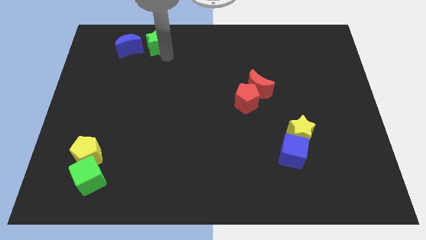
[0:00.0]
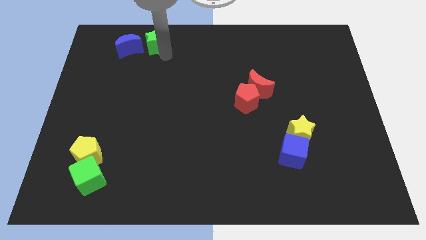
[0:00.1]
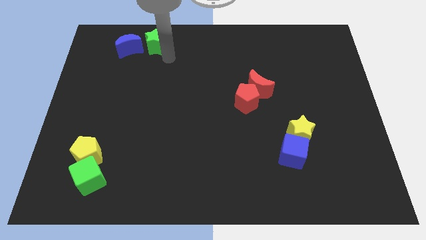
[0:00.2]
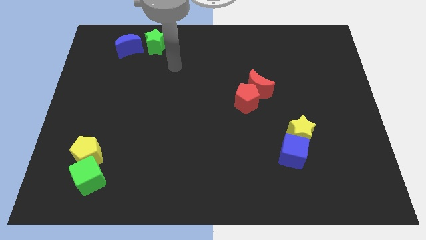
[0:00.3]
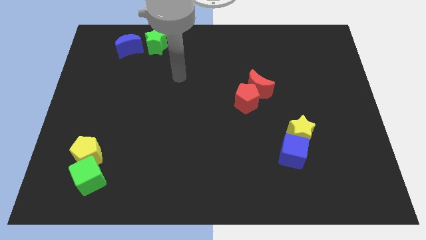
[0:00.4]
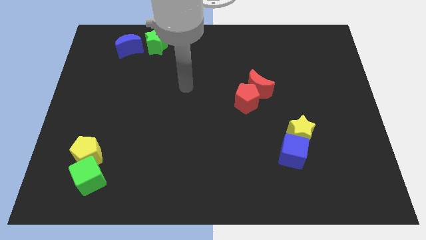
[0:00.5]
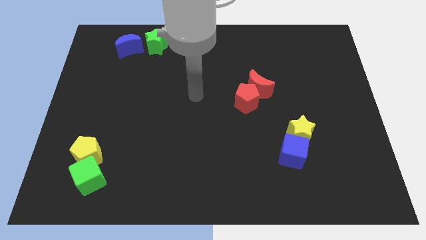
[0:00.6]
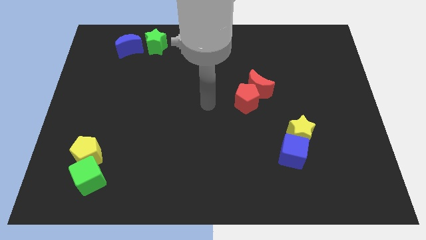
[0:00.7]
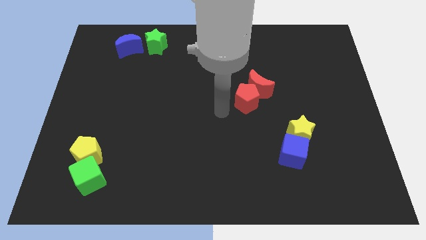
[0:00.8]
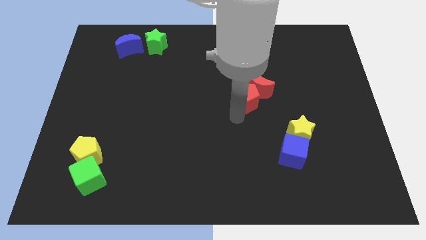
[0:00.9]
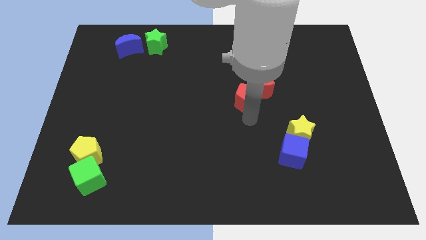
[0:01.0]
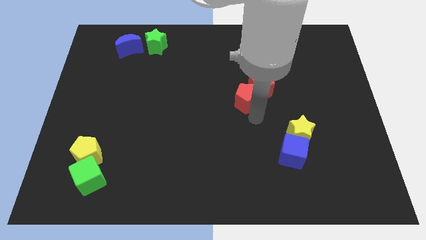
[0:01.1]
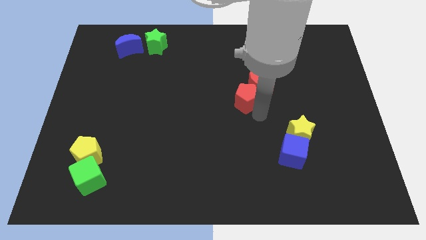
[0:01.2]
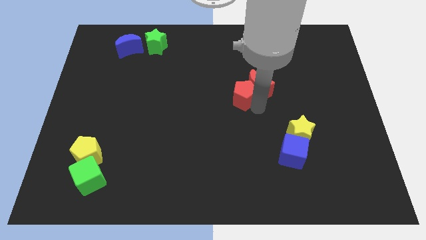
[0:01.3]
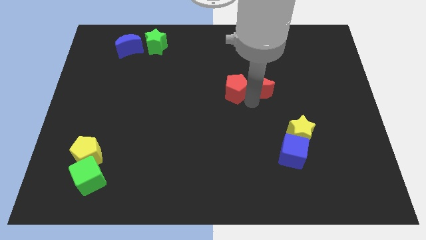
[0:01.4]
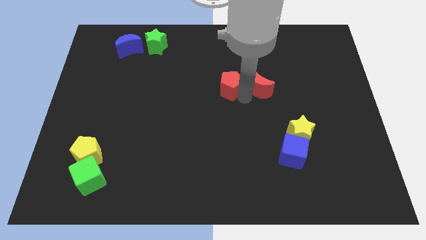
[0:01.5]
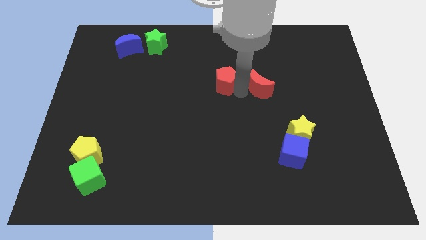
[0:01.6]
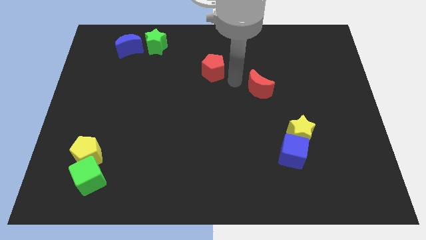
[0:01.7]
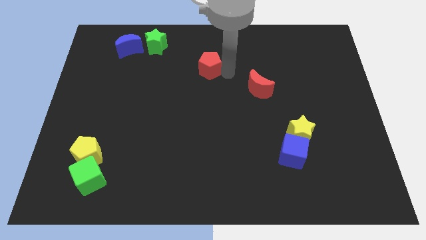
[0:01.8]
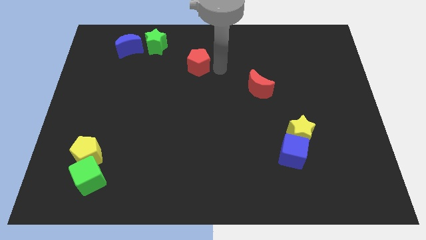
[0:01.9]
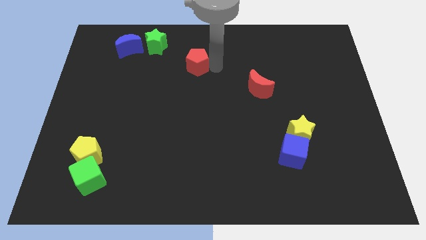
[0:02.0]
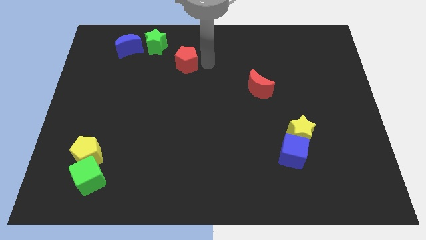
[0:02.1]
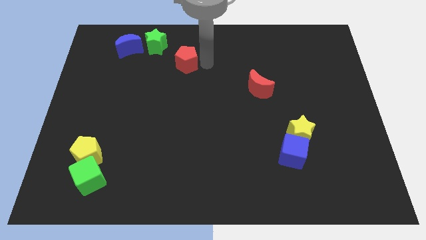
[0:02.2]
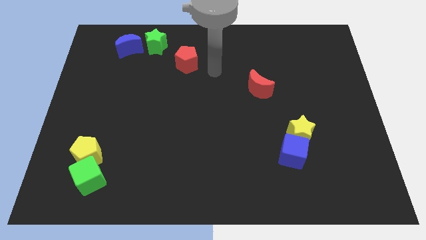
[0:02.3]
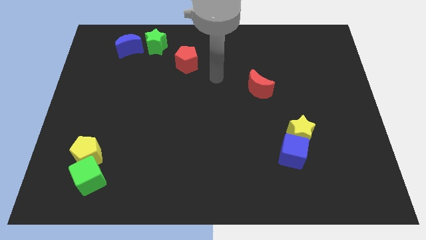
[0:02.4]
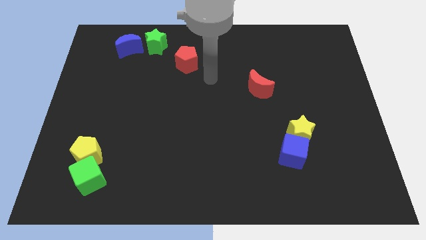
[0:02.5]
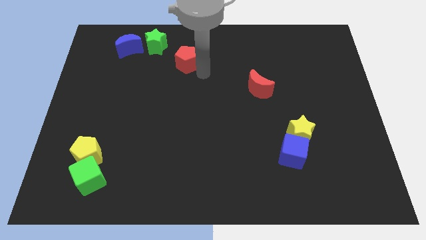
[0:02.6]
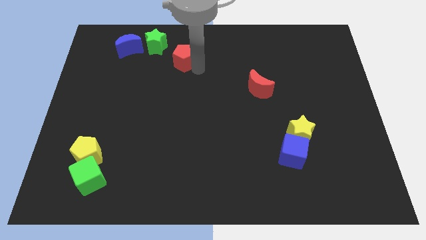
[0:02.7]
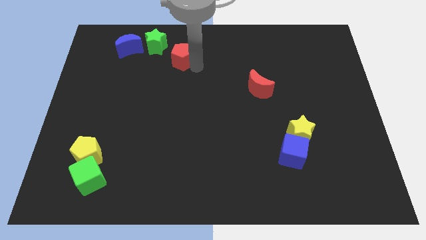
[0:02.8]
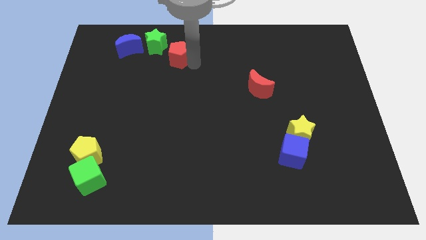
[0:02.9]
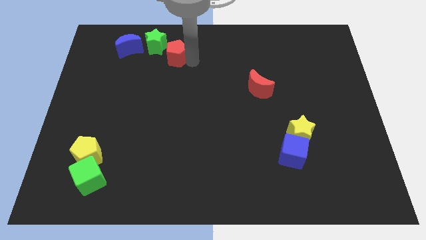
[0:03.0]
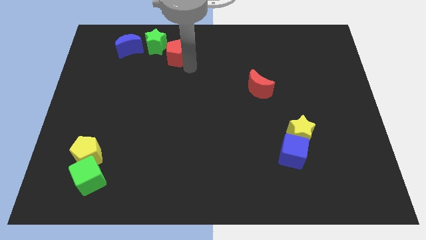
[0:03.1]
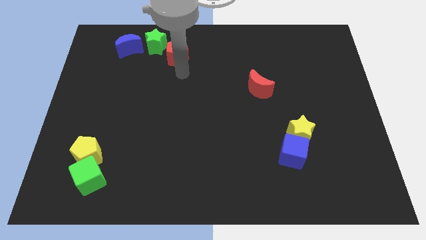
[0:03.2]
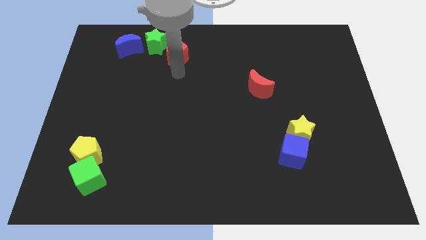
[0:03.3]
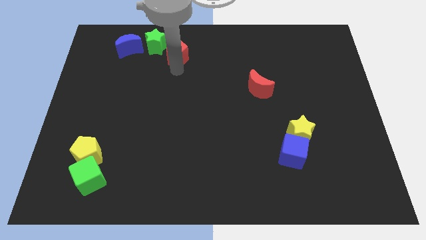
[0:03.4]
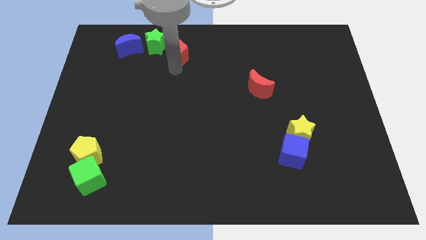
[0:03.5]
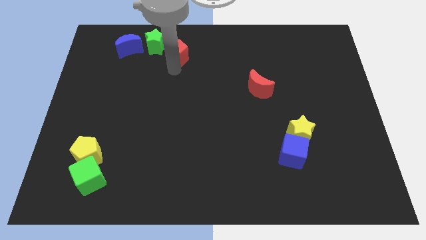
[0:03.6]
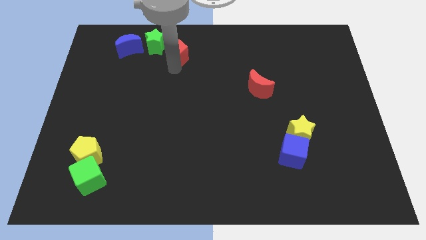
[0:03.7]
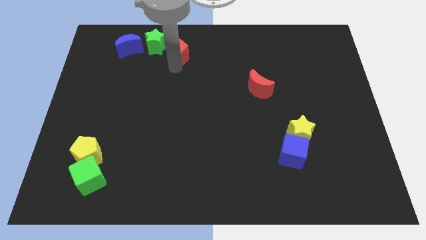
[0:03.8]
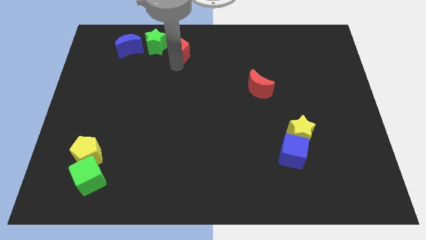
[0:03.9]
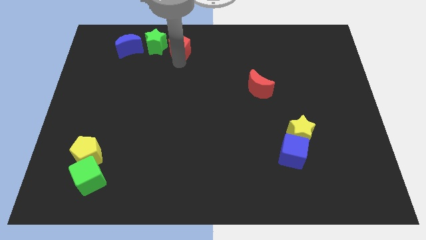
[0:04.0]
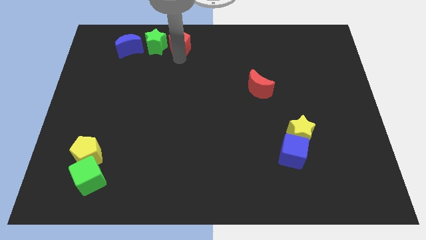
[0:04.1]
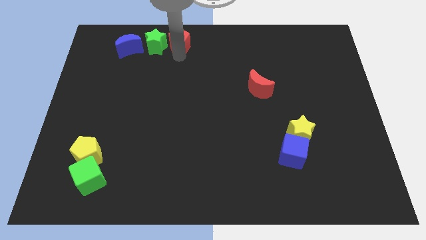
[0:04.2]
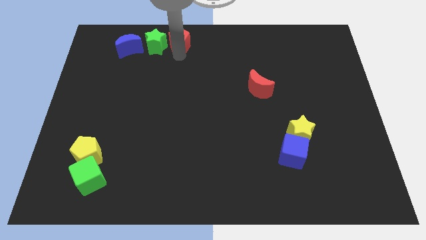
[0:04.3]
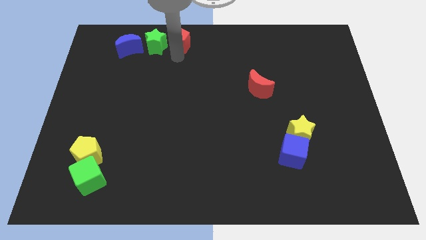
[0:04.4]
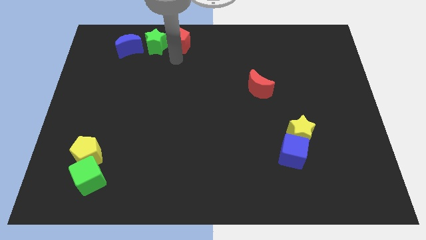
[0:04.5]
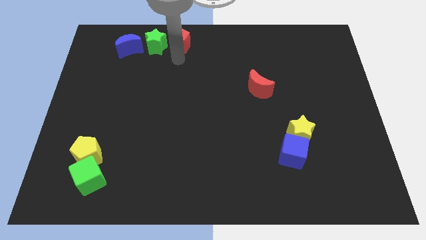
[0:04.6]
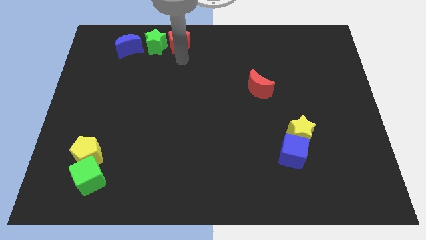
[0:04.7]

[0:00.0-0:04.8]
place the red pentagon at teh right side of the green star

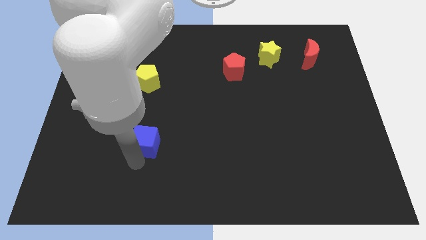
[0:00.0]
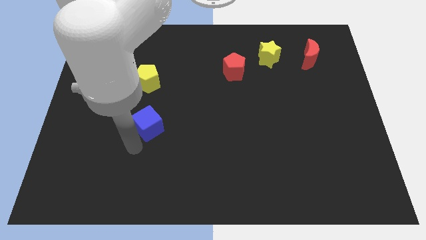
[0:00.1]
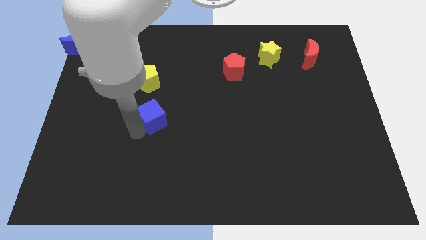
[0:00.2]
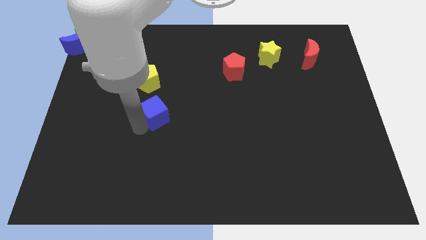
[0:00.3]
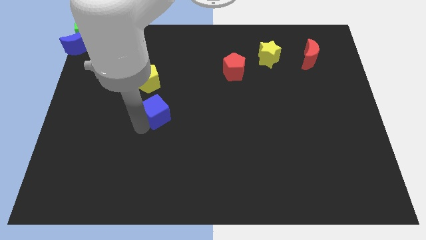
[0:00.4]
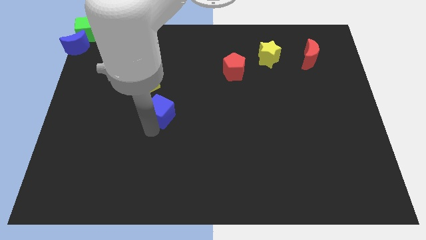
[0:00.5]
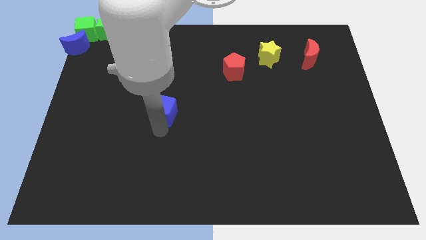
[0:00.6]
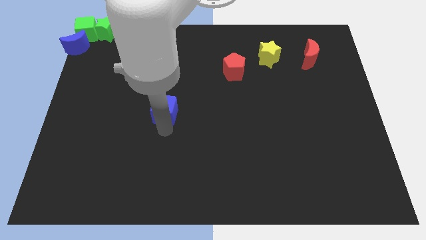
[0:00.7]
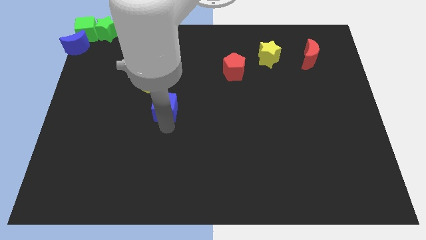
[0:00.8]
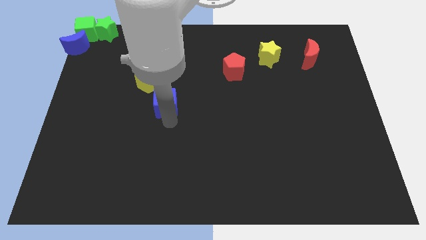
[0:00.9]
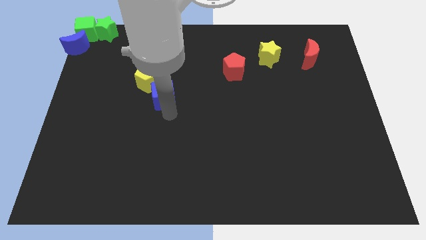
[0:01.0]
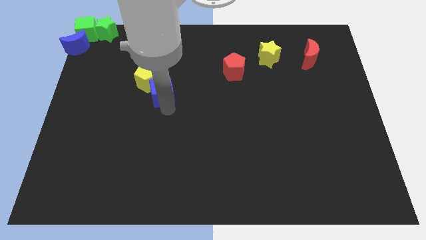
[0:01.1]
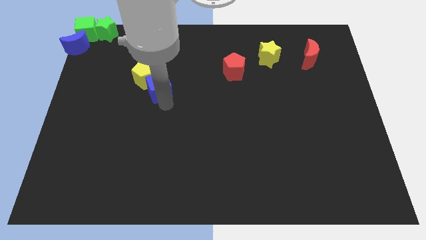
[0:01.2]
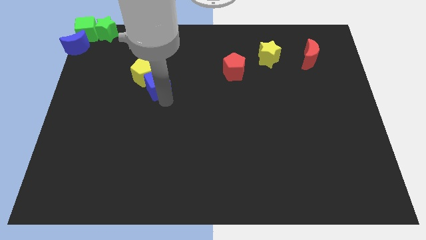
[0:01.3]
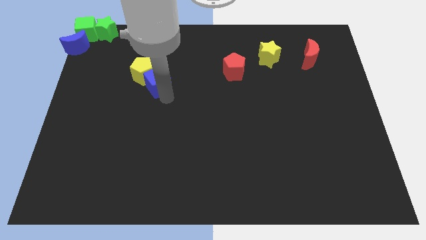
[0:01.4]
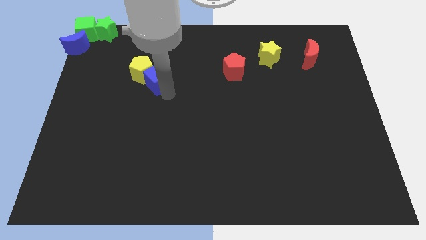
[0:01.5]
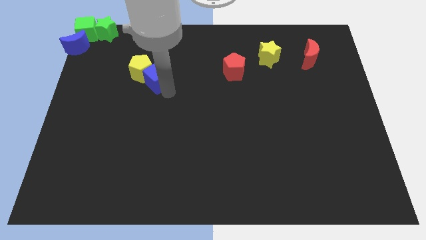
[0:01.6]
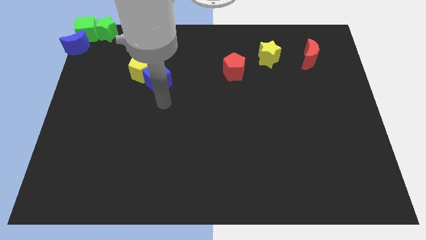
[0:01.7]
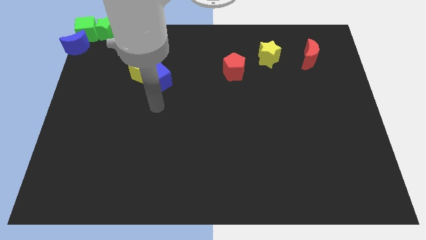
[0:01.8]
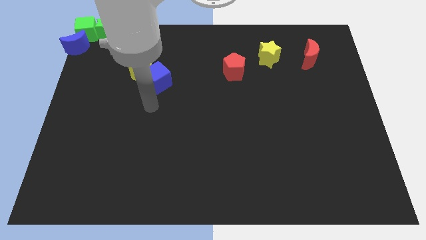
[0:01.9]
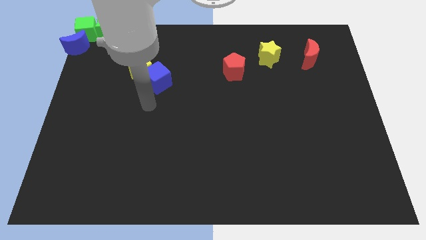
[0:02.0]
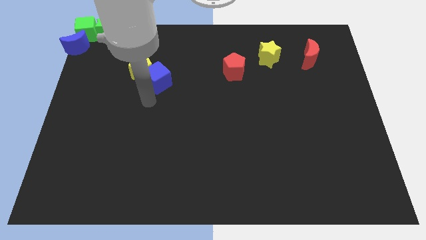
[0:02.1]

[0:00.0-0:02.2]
slide blue cube into yellow pentagon

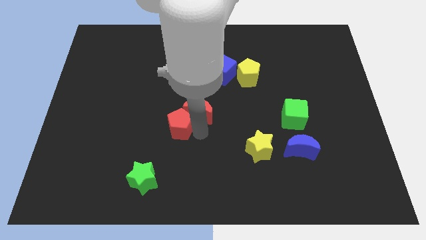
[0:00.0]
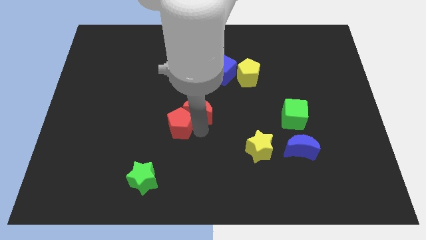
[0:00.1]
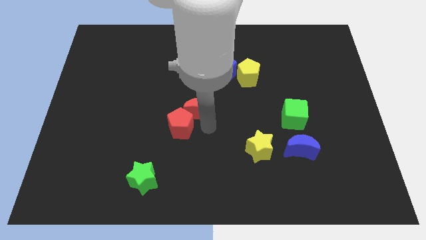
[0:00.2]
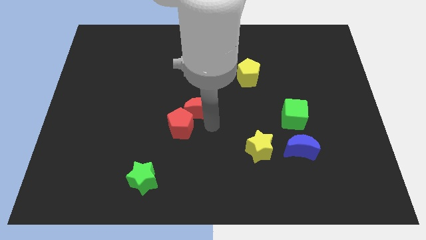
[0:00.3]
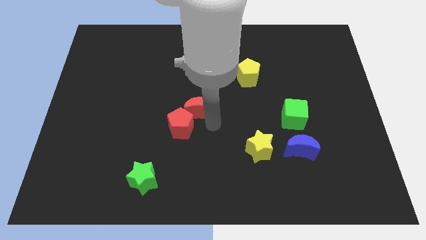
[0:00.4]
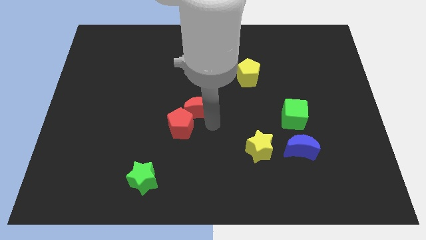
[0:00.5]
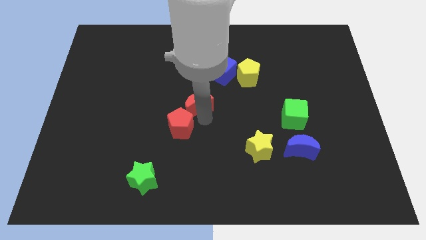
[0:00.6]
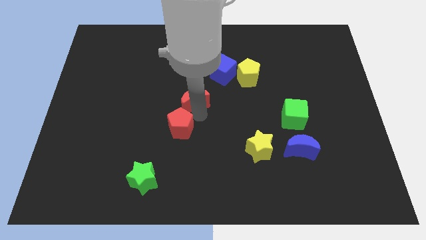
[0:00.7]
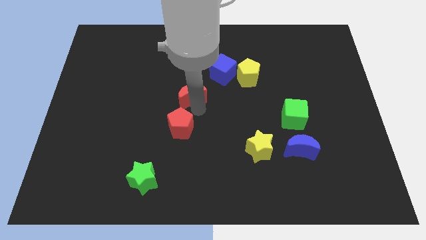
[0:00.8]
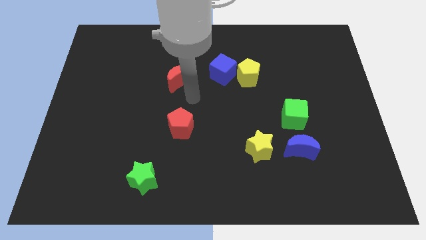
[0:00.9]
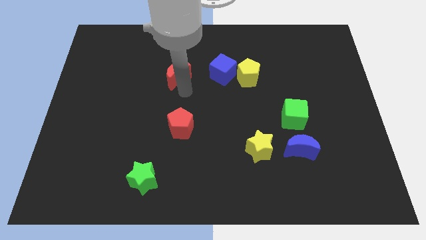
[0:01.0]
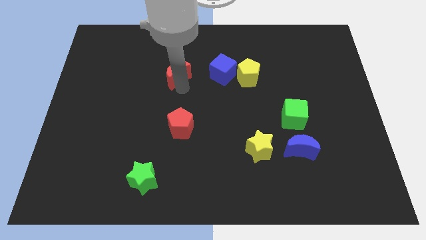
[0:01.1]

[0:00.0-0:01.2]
push the red crescent left to the blue cube

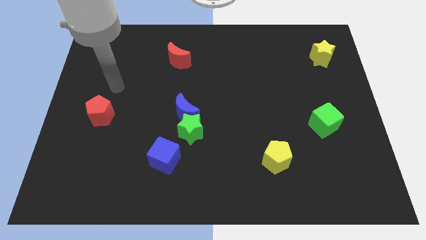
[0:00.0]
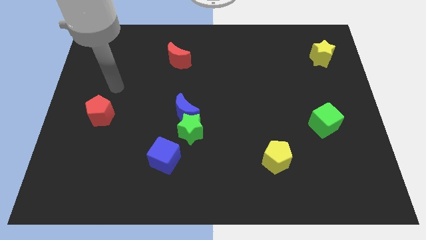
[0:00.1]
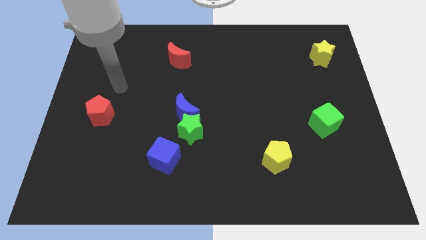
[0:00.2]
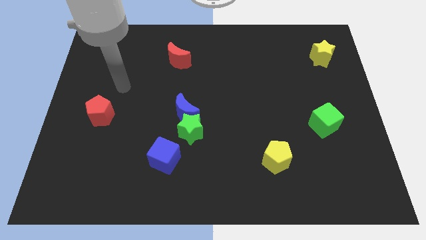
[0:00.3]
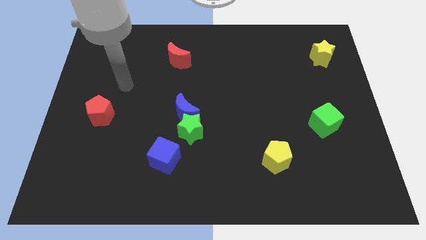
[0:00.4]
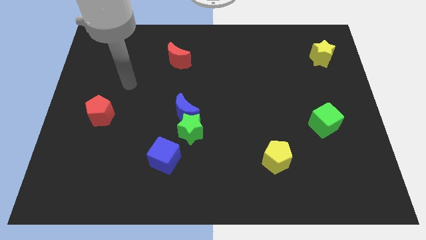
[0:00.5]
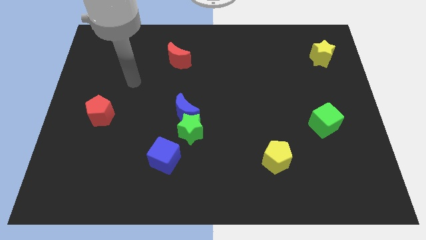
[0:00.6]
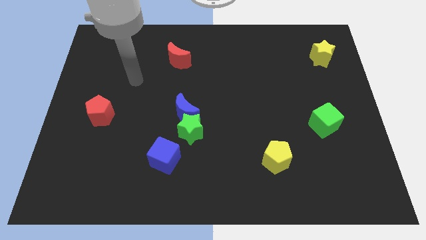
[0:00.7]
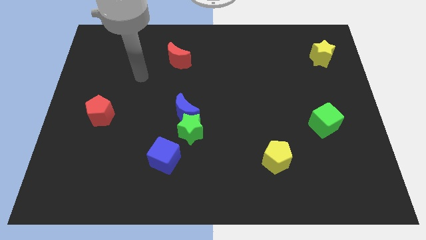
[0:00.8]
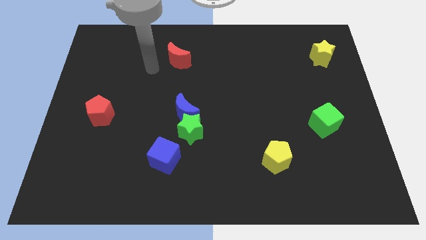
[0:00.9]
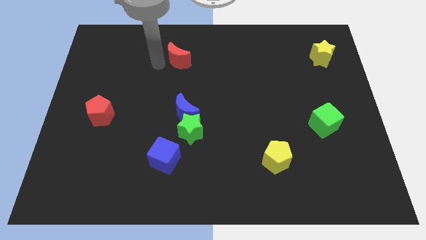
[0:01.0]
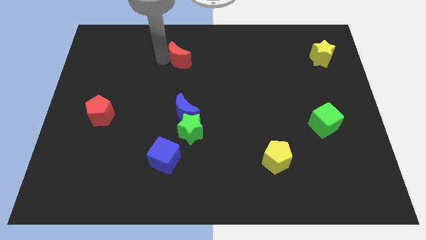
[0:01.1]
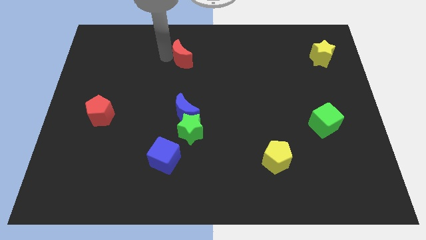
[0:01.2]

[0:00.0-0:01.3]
place the arm to the left of the red moon
